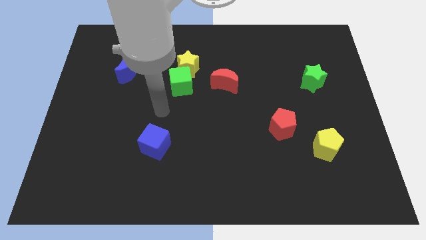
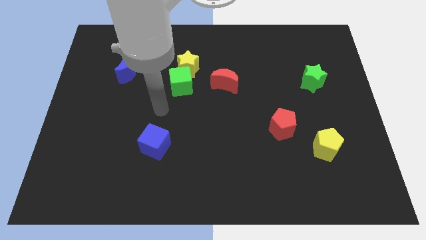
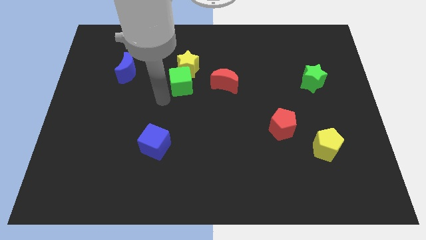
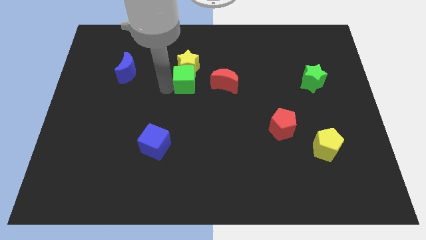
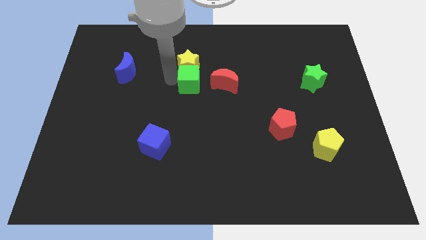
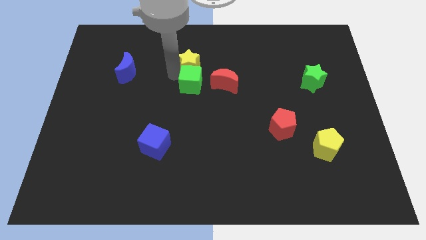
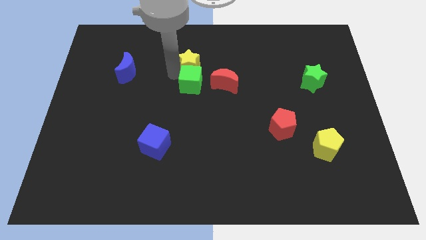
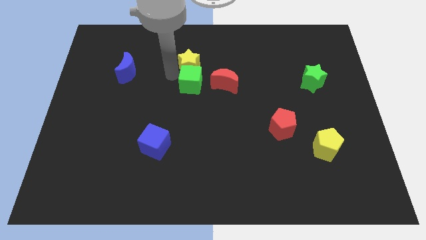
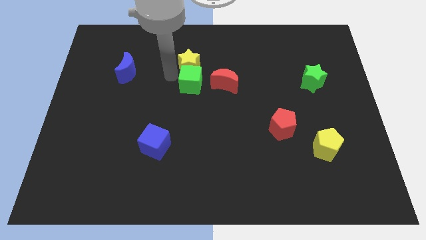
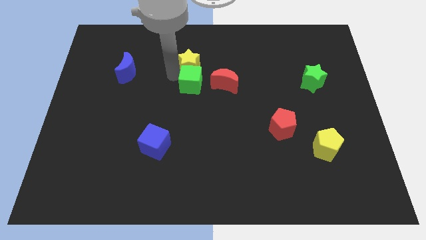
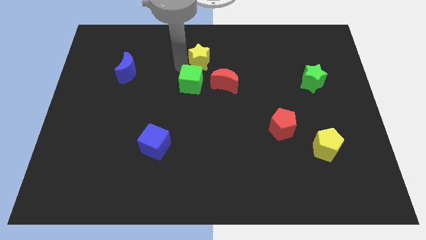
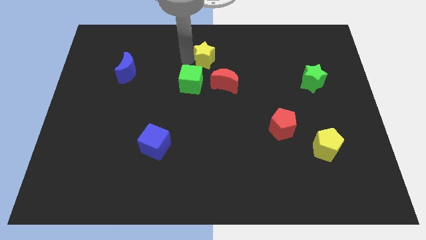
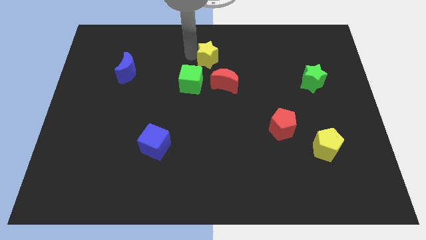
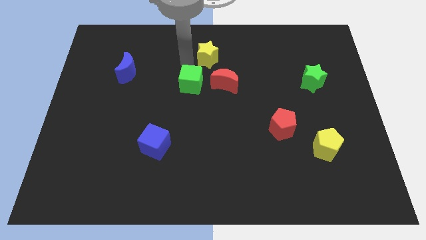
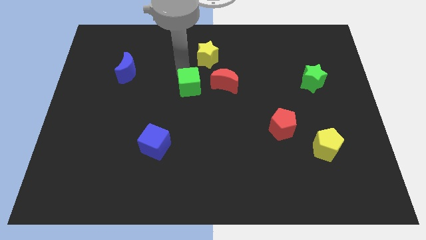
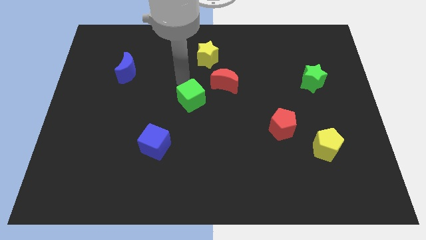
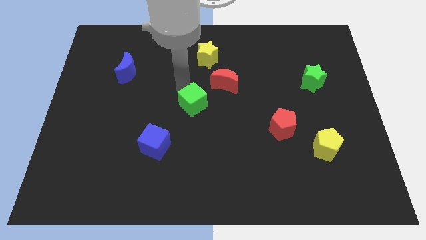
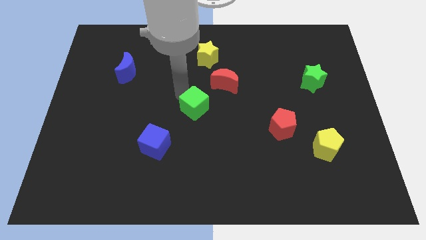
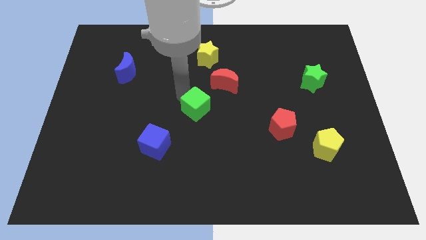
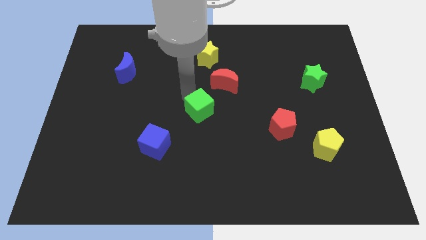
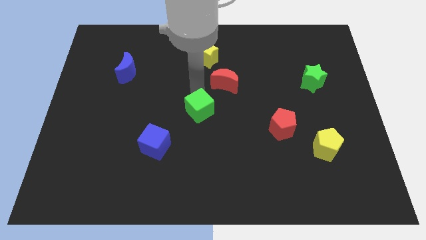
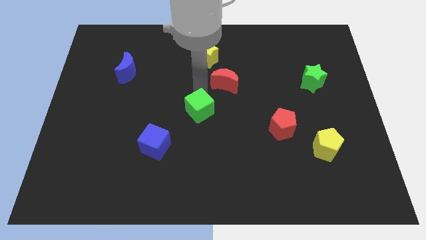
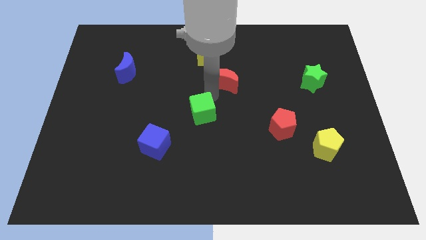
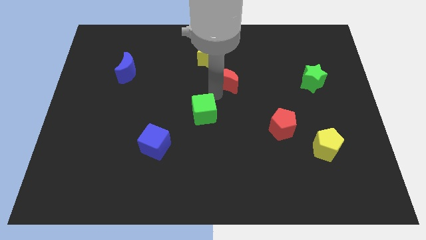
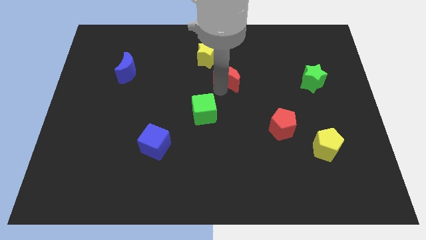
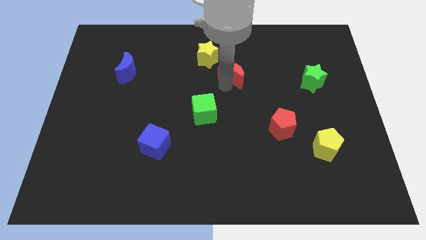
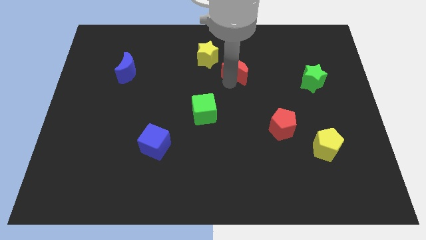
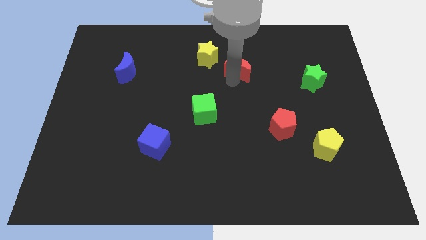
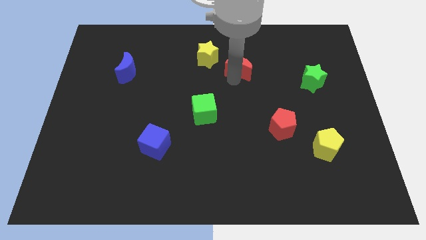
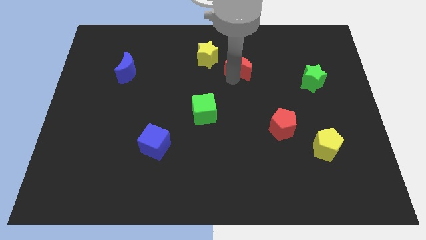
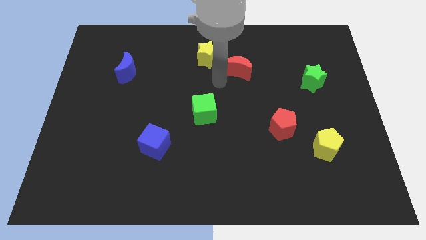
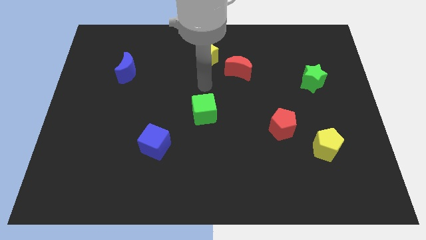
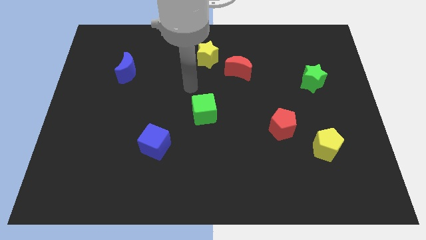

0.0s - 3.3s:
separate the yellow star green cube and red moon

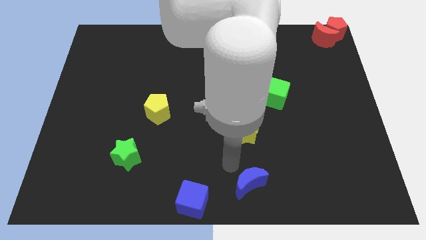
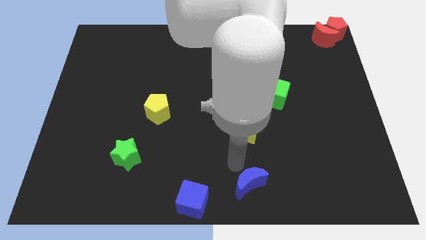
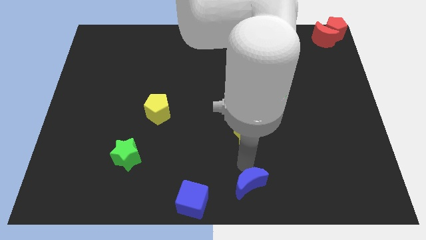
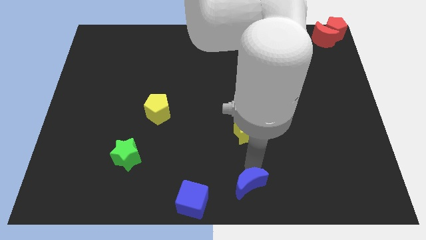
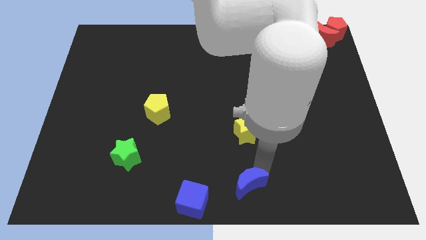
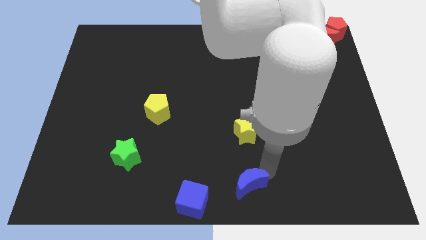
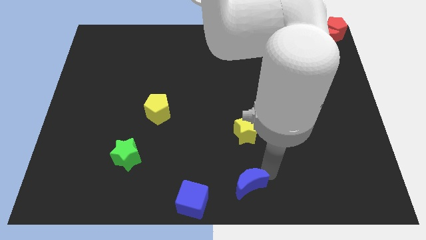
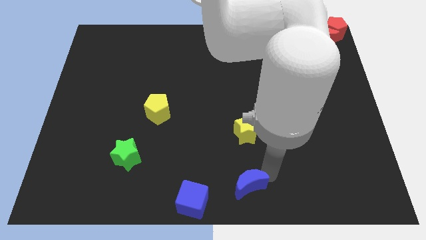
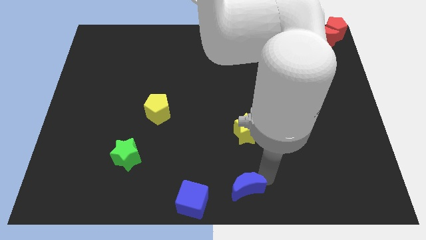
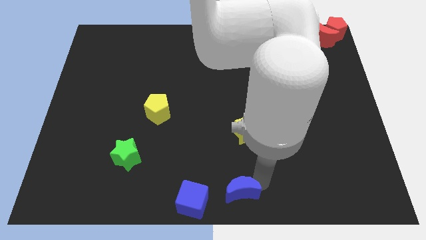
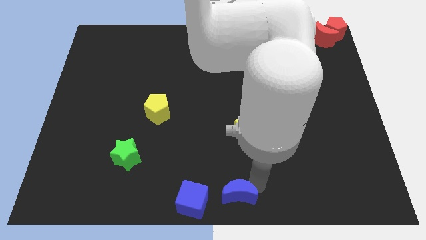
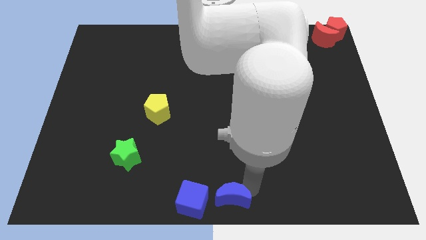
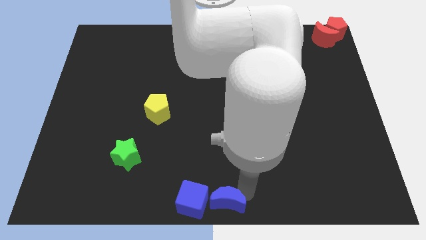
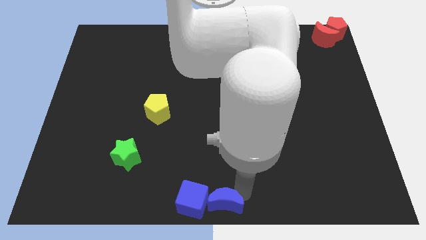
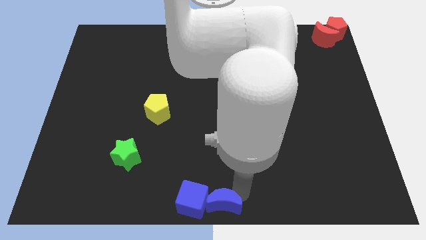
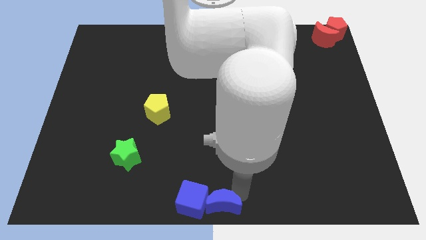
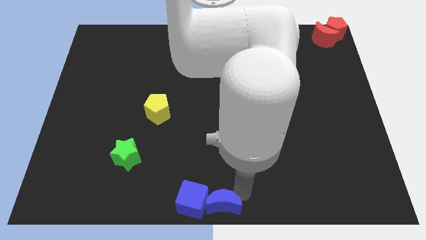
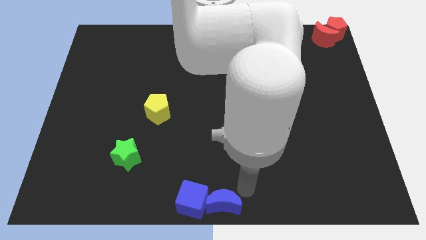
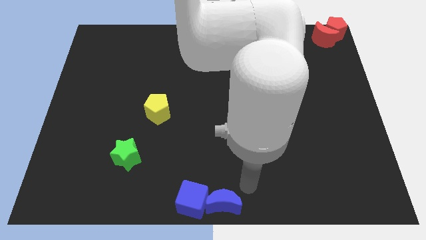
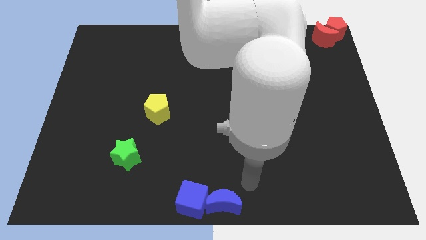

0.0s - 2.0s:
move the blue crescent to the right of the blue cube

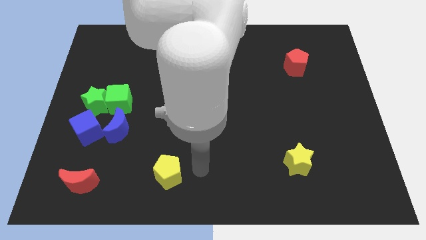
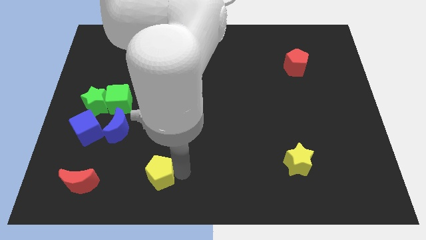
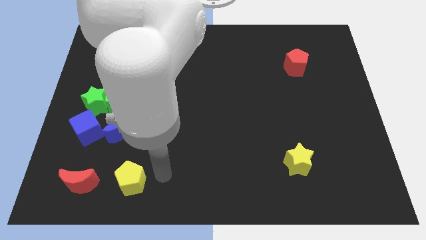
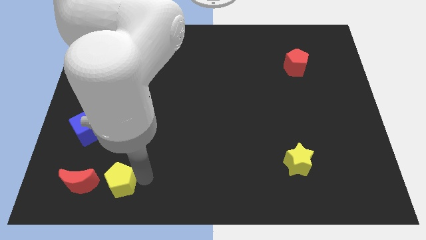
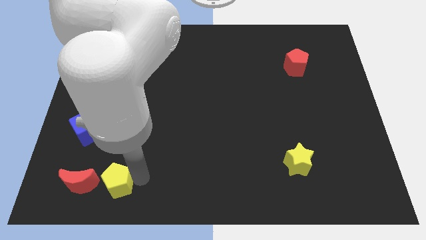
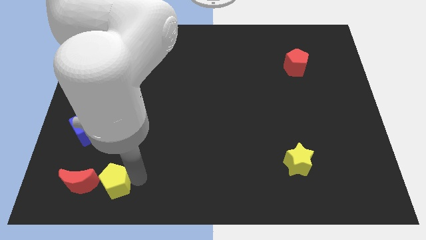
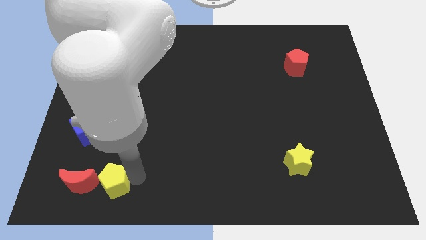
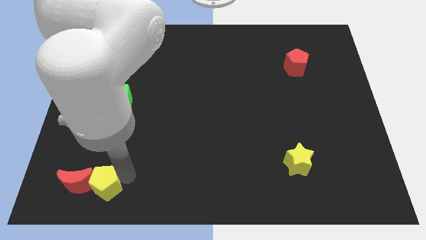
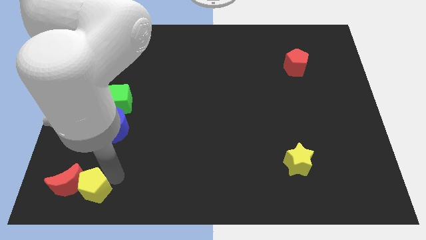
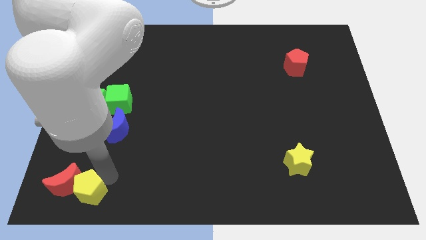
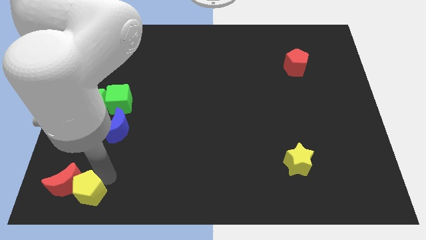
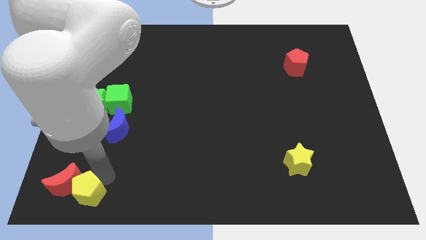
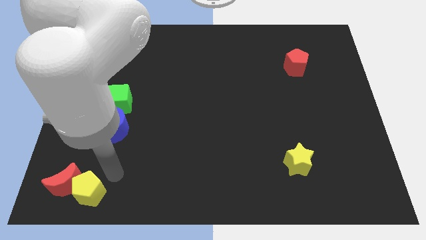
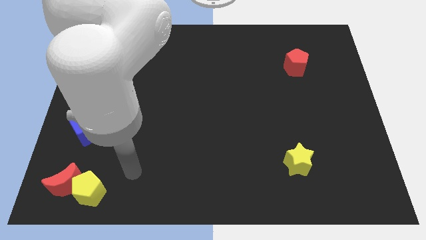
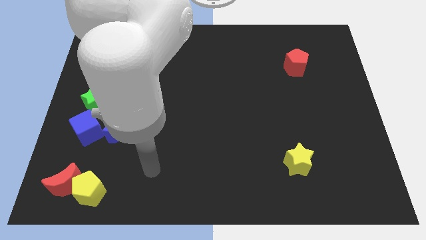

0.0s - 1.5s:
move the yellow pentagon into the red moon

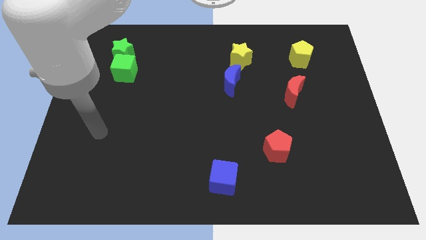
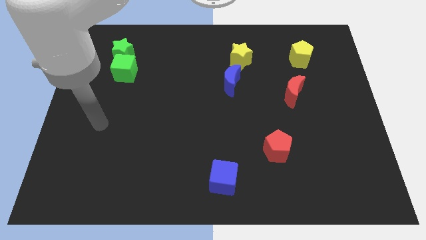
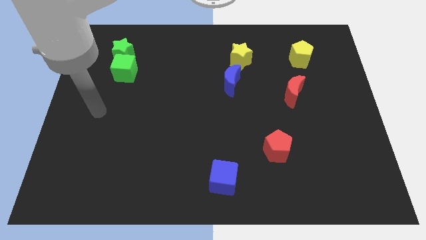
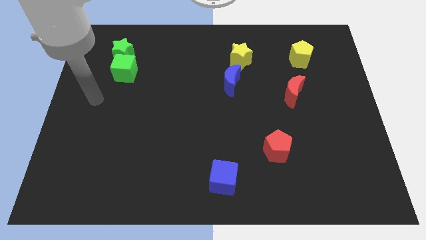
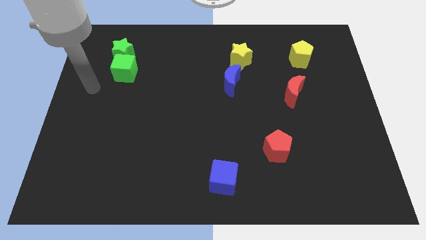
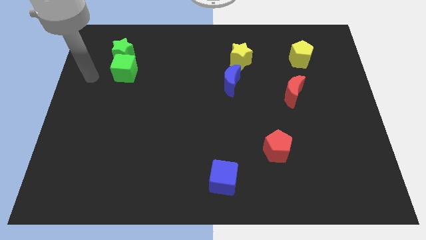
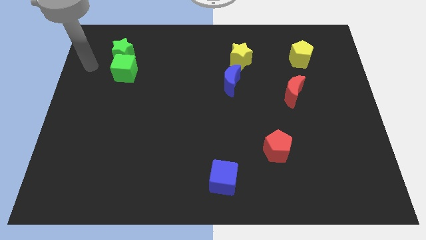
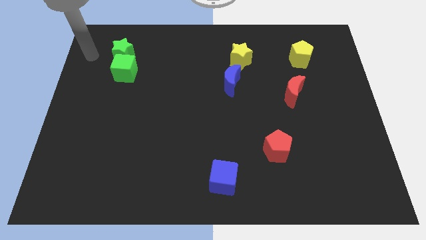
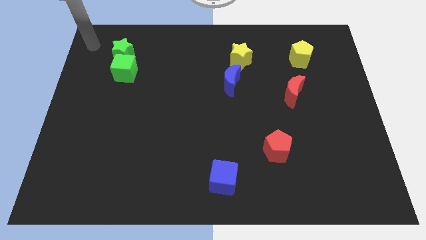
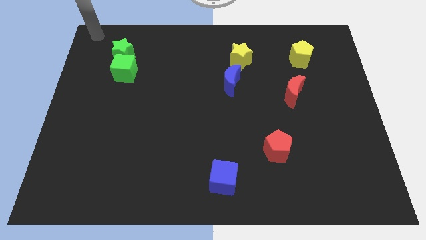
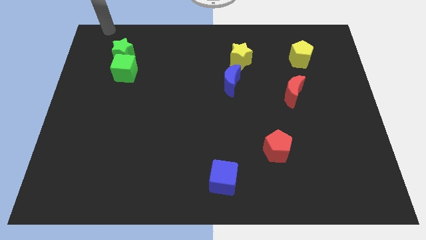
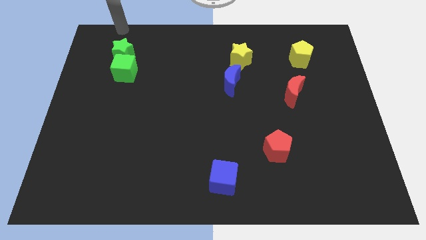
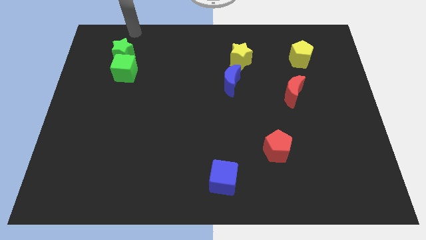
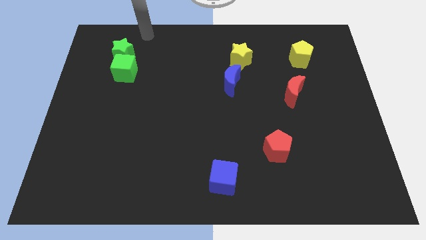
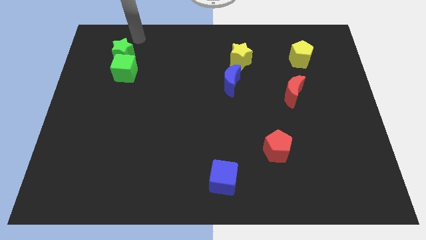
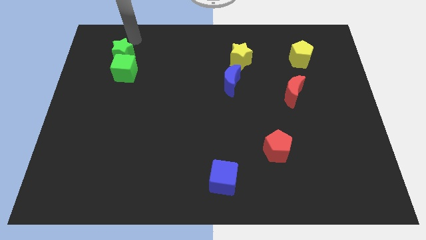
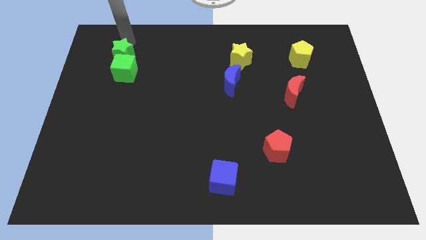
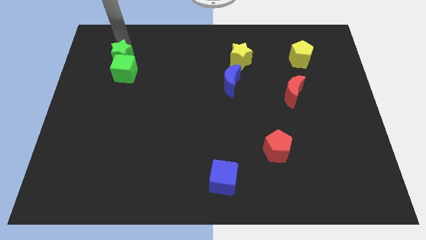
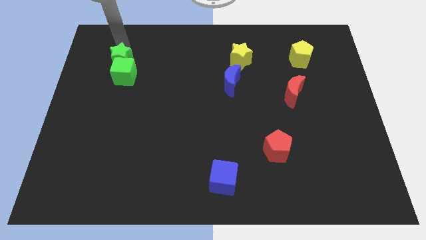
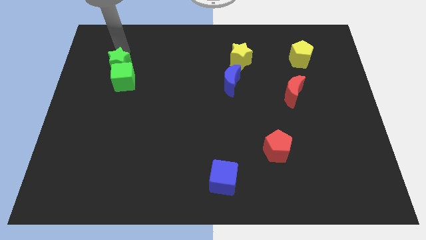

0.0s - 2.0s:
push the green blocks slightly towards the bottom

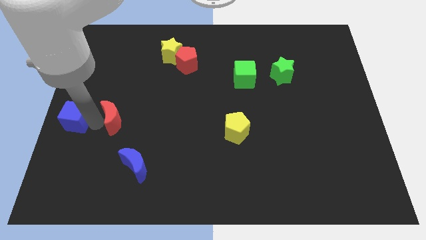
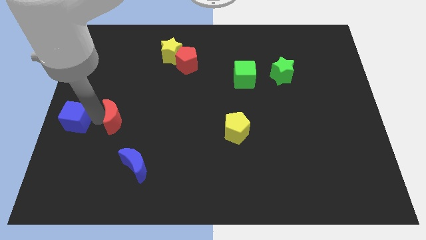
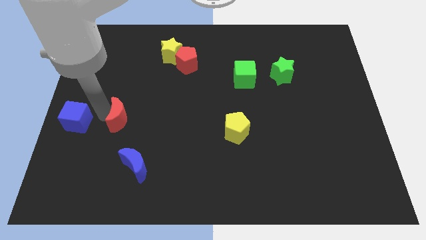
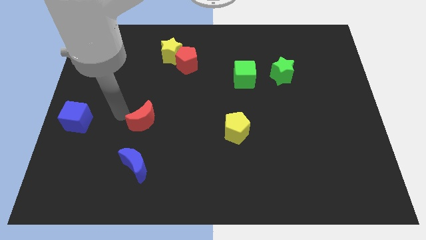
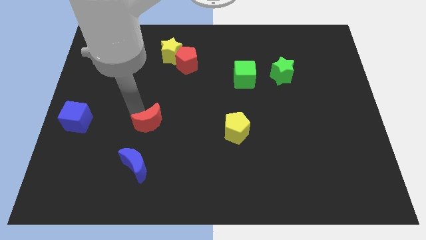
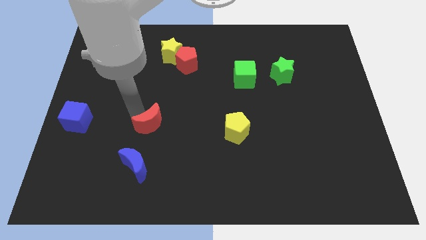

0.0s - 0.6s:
move the red crescent above the blue crescent
